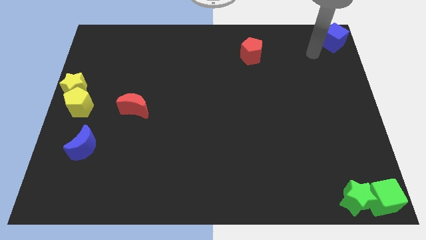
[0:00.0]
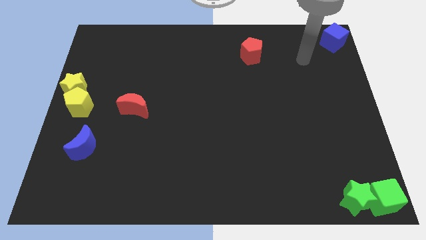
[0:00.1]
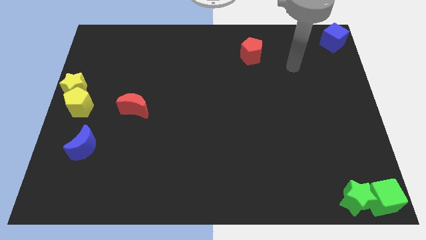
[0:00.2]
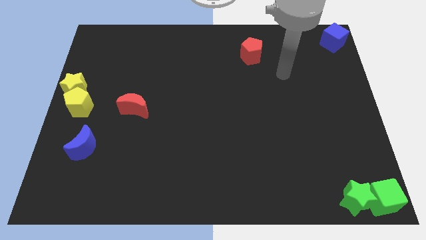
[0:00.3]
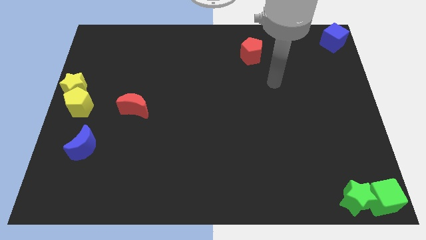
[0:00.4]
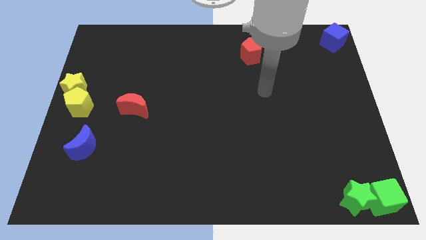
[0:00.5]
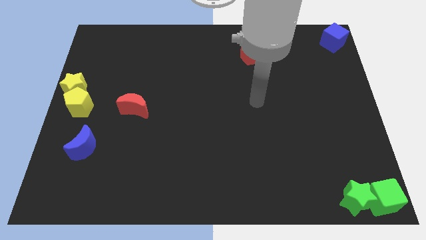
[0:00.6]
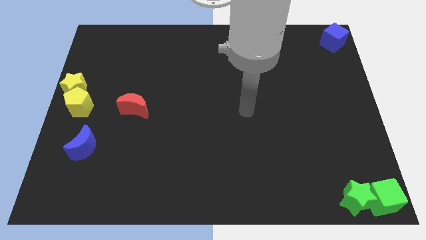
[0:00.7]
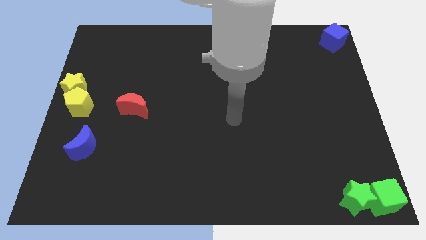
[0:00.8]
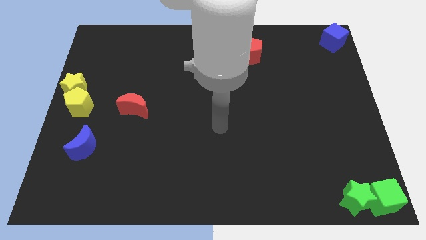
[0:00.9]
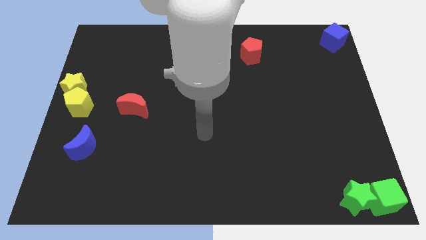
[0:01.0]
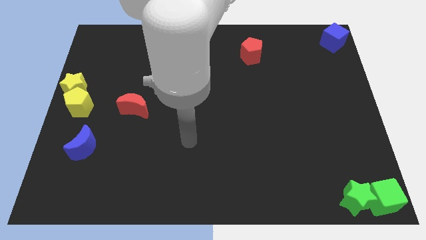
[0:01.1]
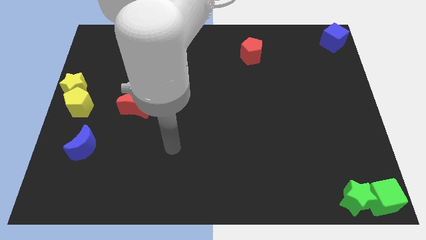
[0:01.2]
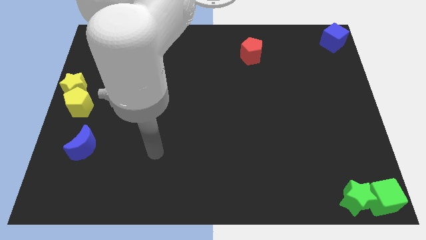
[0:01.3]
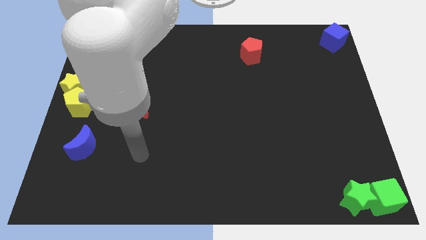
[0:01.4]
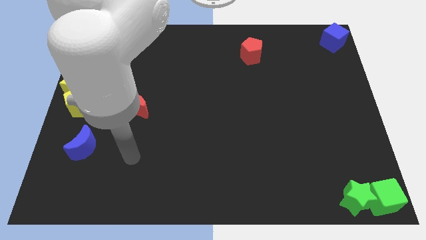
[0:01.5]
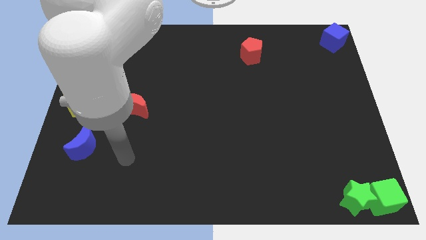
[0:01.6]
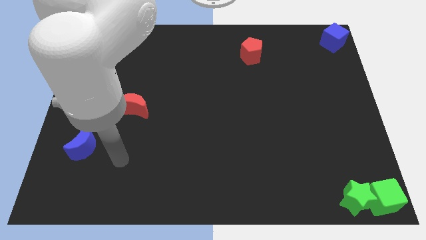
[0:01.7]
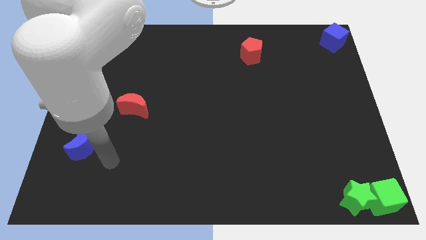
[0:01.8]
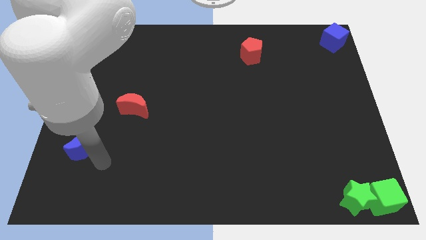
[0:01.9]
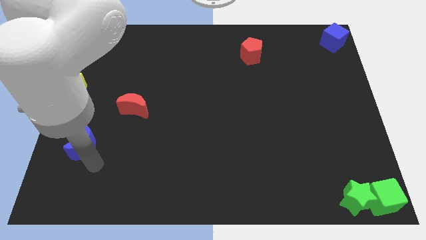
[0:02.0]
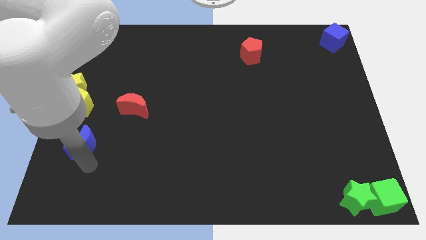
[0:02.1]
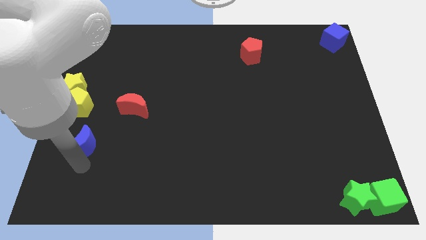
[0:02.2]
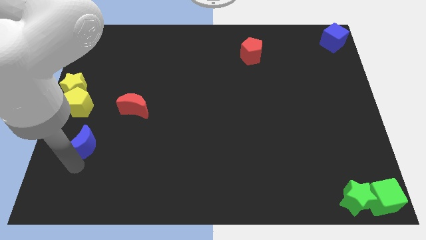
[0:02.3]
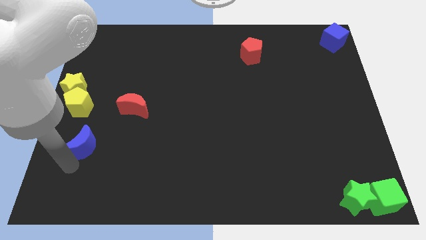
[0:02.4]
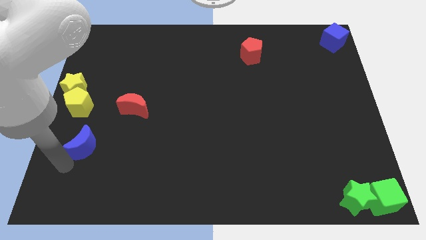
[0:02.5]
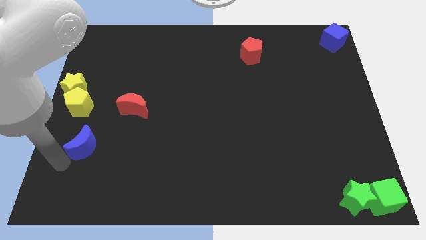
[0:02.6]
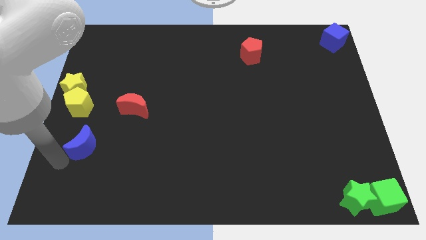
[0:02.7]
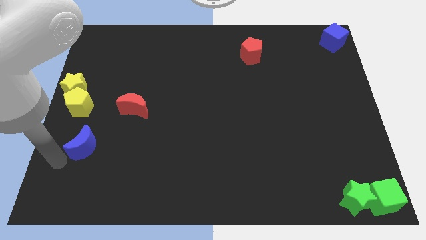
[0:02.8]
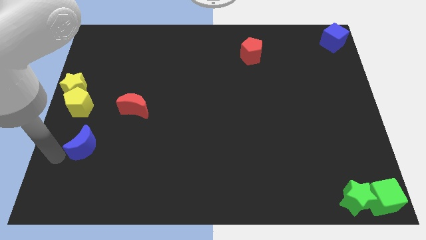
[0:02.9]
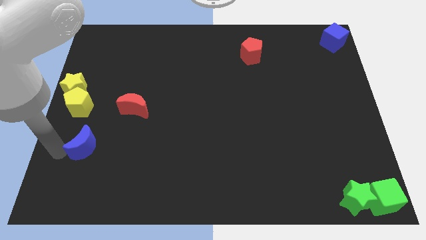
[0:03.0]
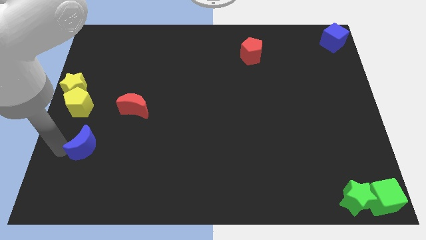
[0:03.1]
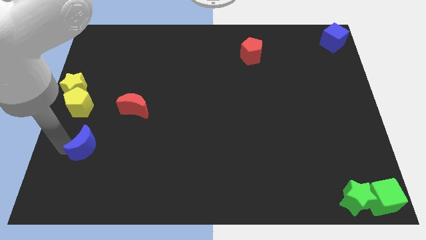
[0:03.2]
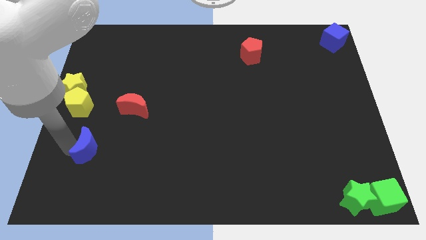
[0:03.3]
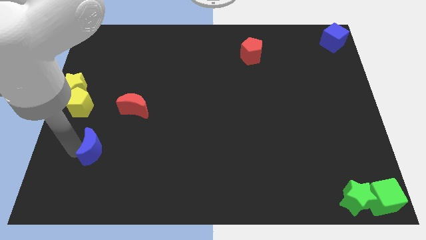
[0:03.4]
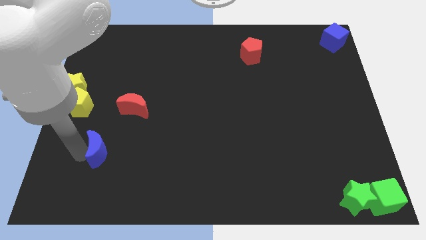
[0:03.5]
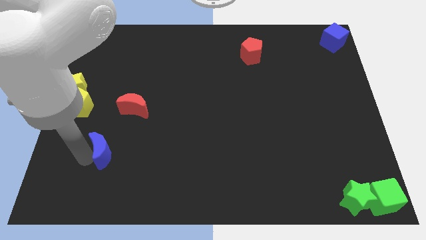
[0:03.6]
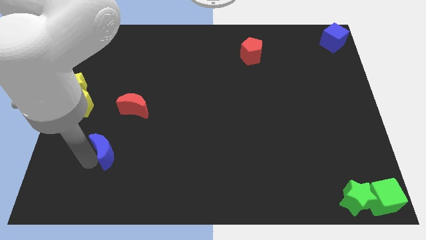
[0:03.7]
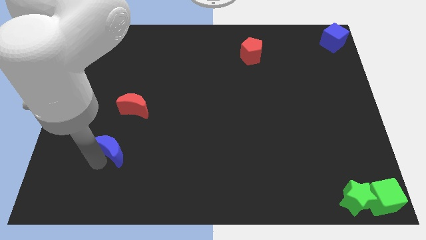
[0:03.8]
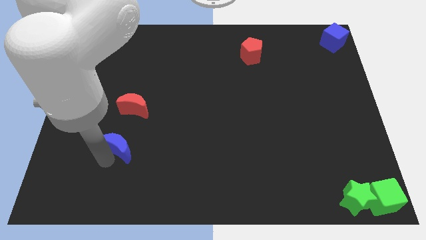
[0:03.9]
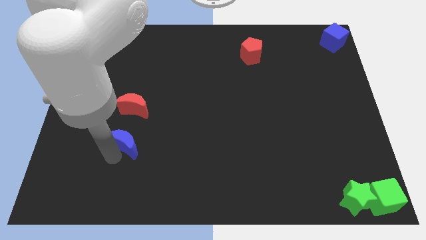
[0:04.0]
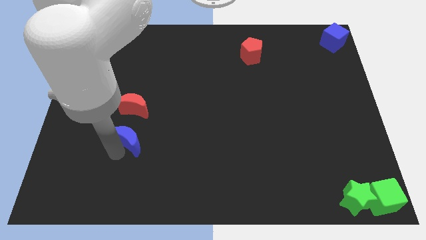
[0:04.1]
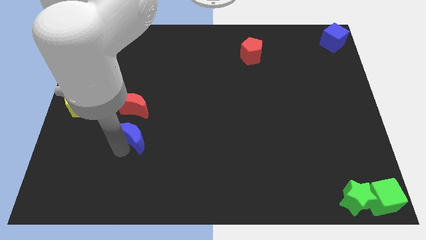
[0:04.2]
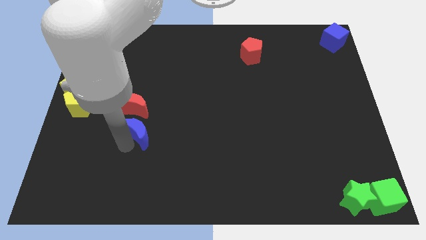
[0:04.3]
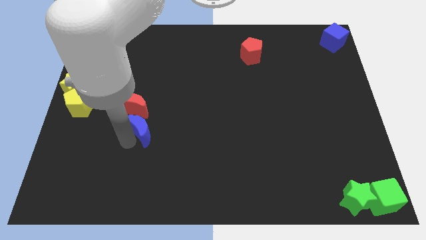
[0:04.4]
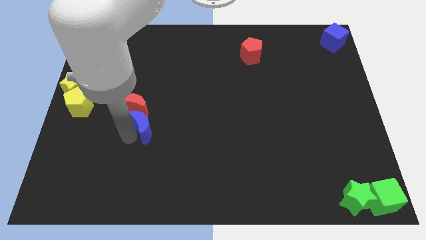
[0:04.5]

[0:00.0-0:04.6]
put the blue moon at the bottom right side of red moon

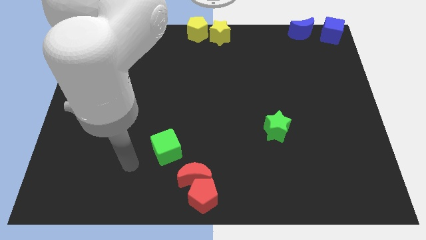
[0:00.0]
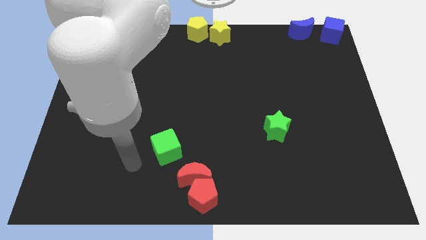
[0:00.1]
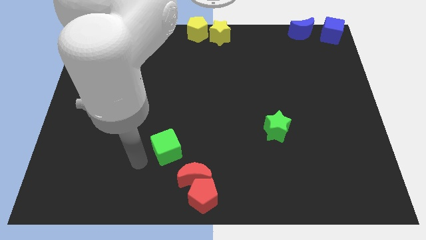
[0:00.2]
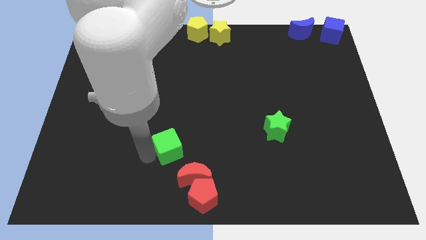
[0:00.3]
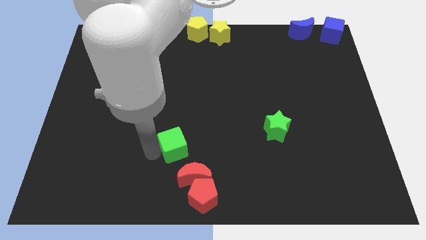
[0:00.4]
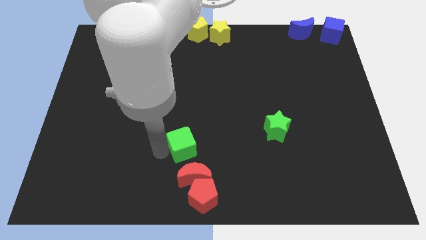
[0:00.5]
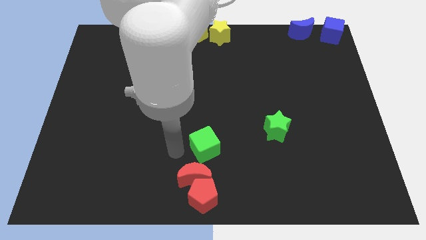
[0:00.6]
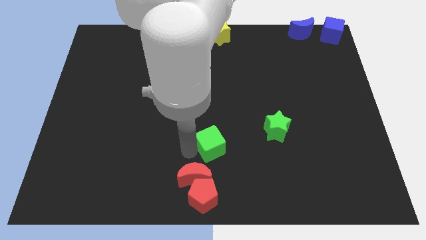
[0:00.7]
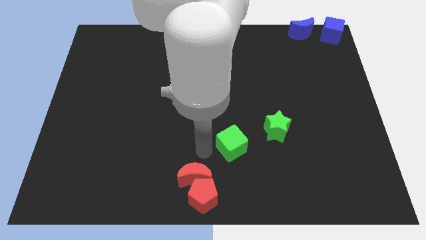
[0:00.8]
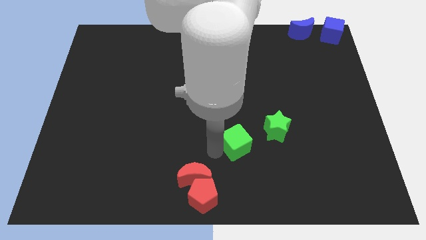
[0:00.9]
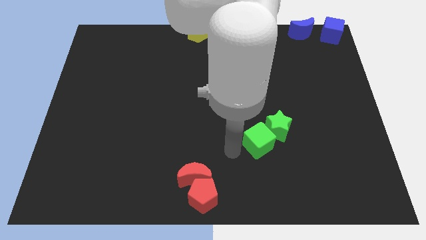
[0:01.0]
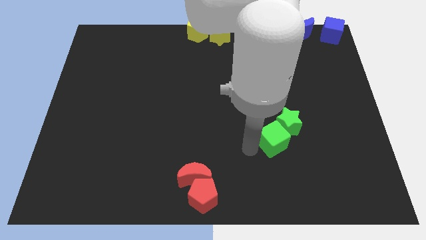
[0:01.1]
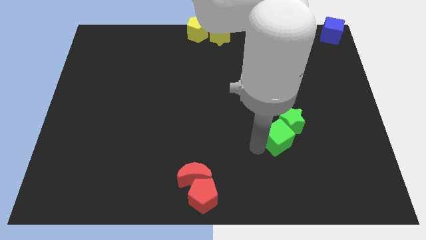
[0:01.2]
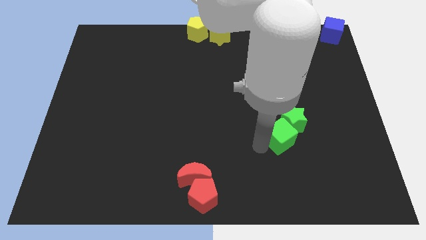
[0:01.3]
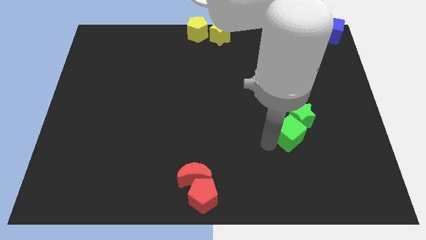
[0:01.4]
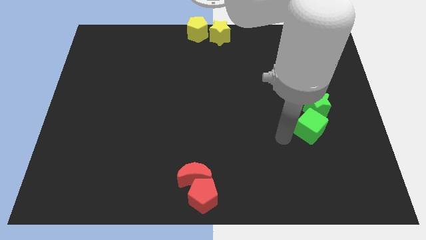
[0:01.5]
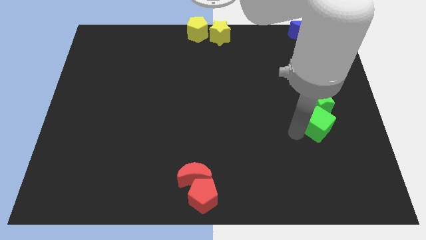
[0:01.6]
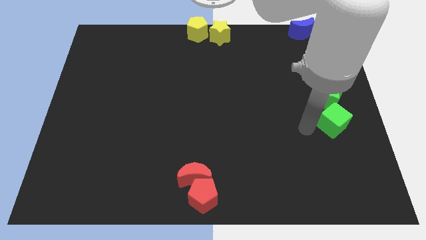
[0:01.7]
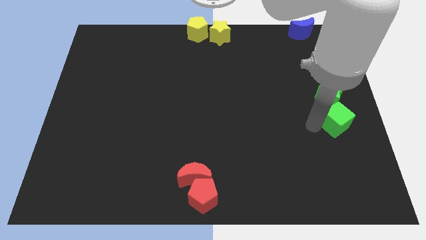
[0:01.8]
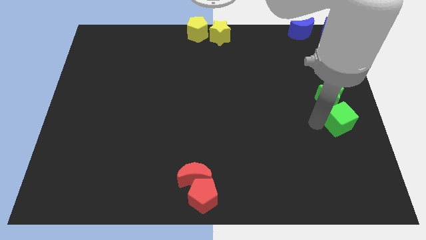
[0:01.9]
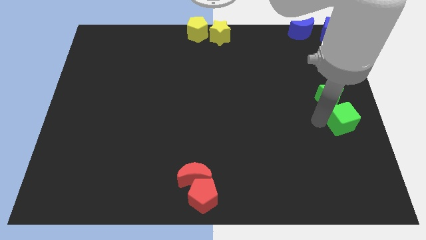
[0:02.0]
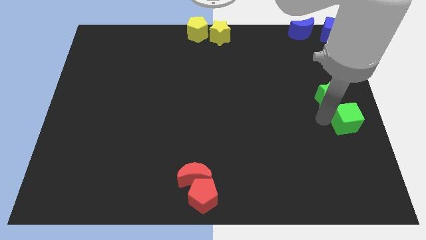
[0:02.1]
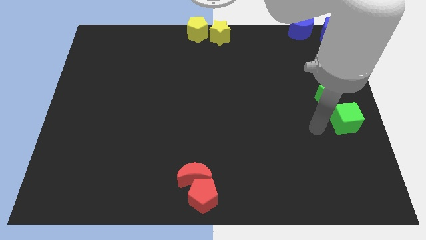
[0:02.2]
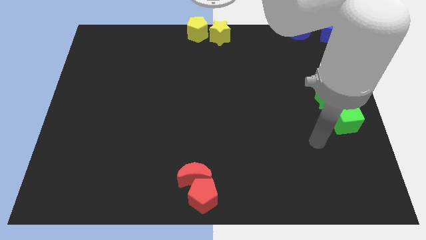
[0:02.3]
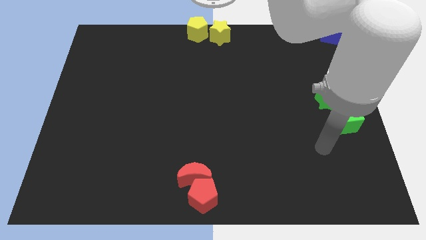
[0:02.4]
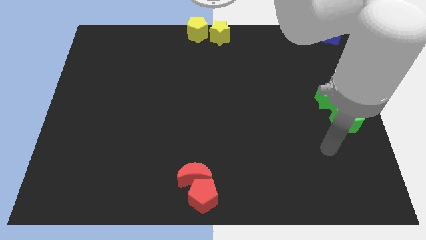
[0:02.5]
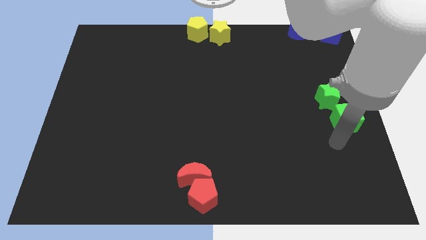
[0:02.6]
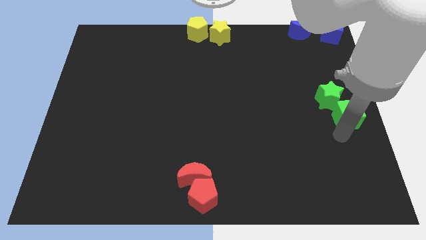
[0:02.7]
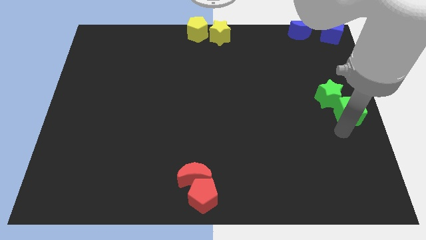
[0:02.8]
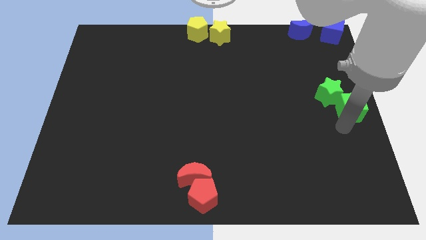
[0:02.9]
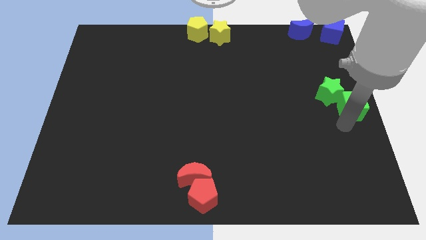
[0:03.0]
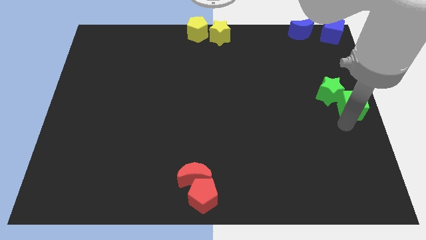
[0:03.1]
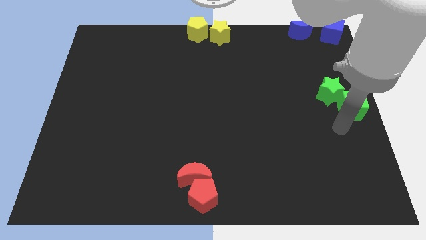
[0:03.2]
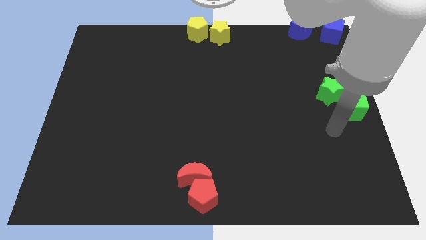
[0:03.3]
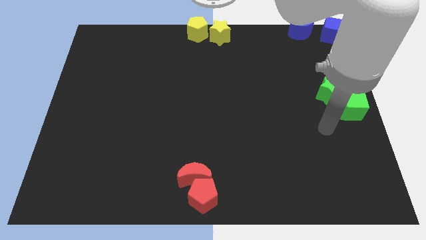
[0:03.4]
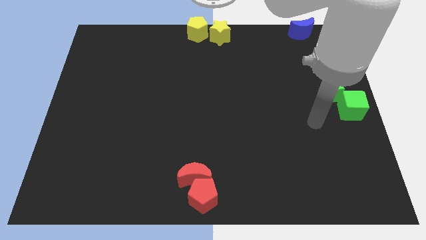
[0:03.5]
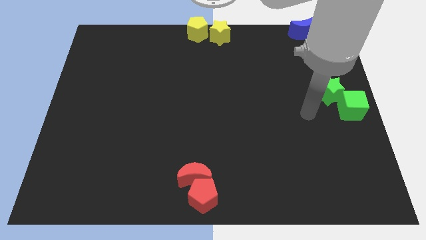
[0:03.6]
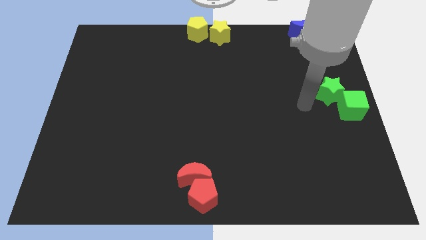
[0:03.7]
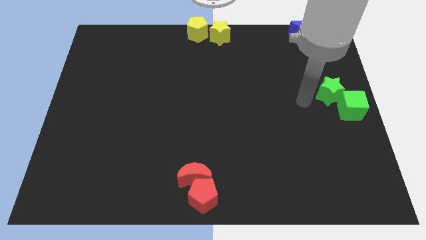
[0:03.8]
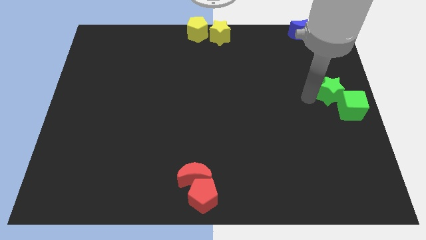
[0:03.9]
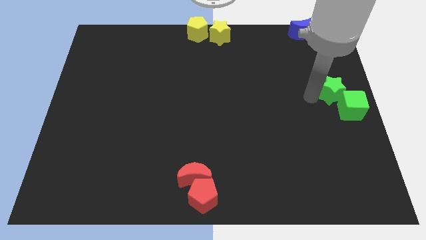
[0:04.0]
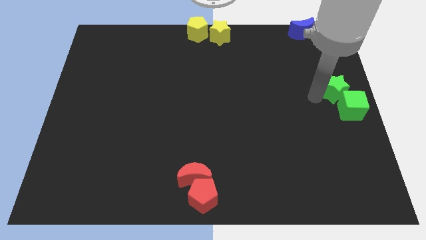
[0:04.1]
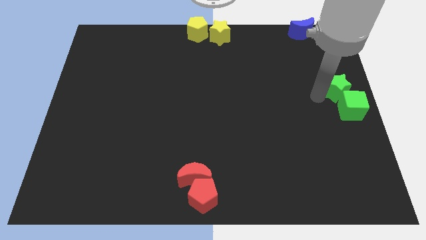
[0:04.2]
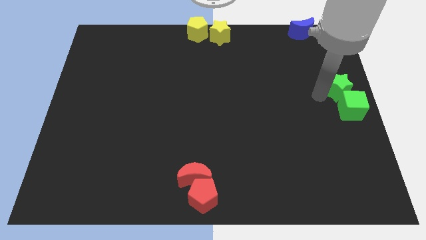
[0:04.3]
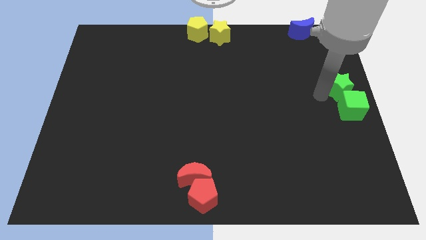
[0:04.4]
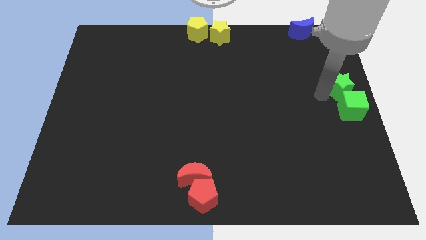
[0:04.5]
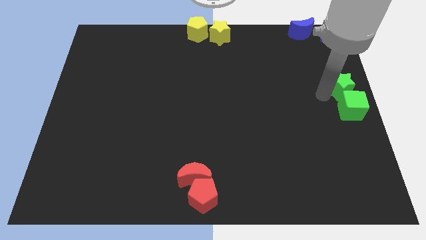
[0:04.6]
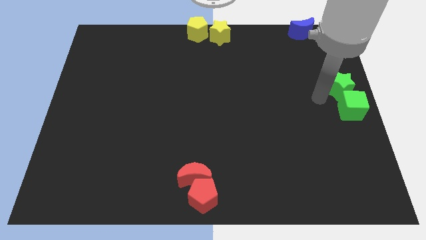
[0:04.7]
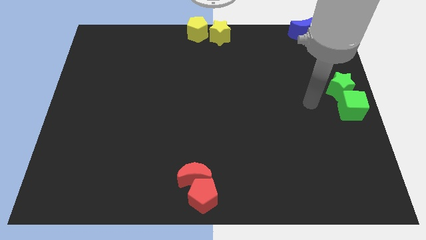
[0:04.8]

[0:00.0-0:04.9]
move green star along with green cube to the right center
